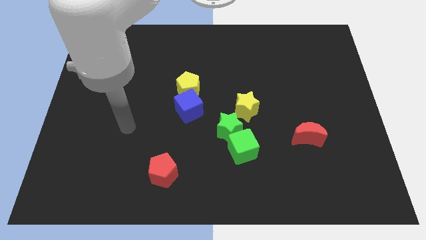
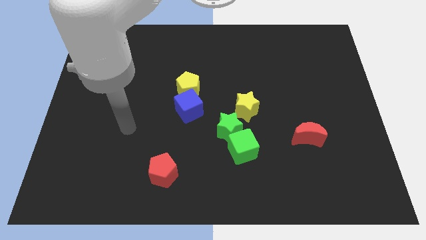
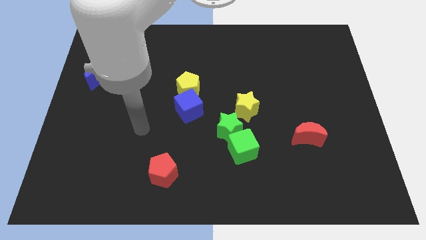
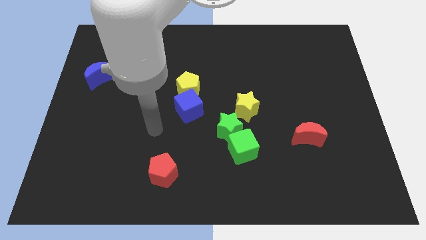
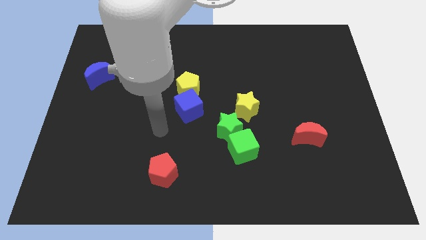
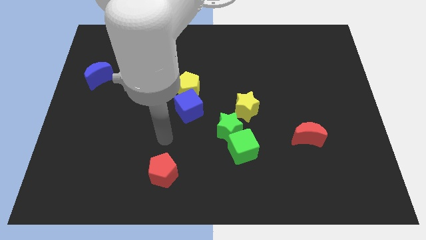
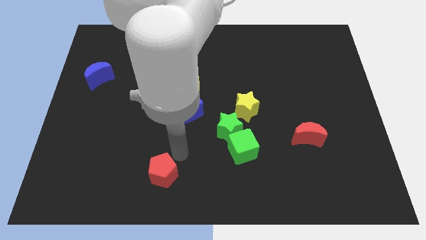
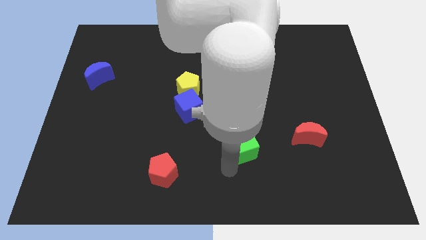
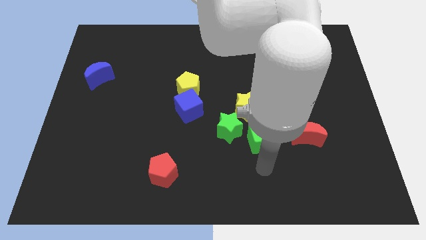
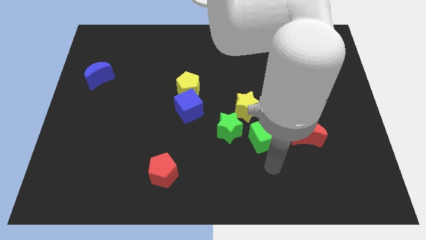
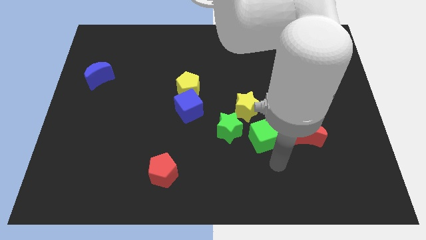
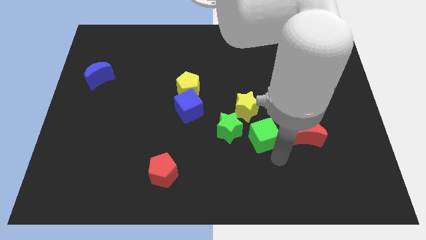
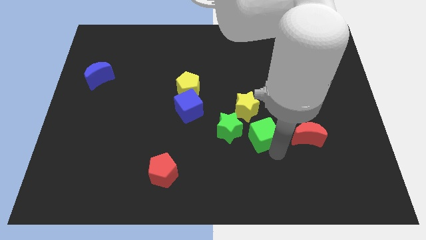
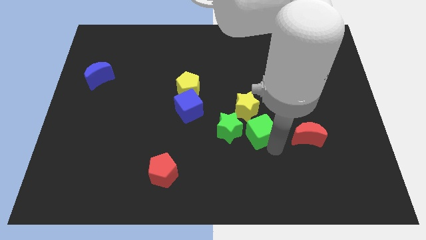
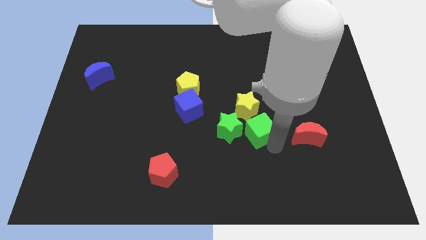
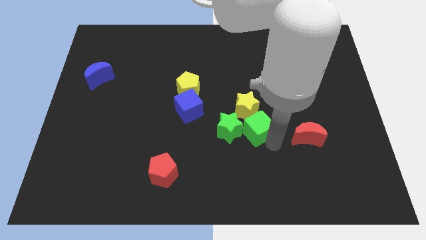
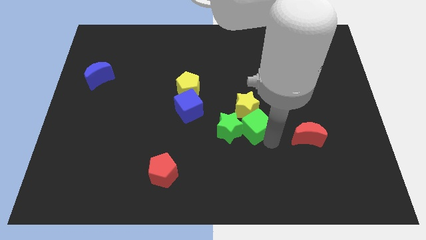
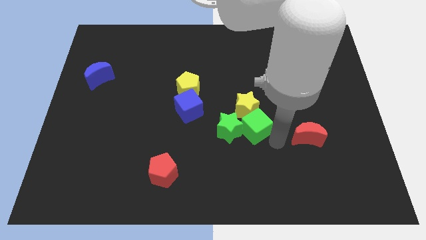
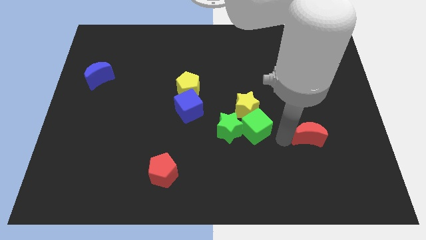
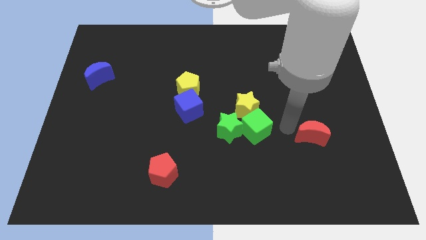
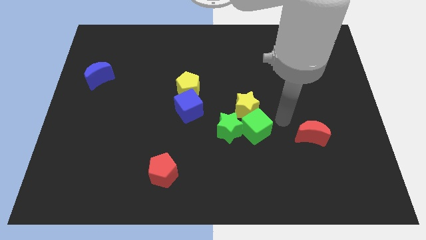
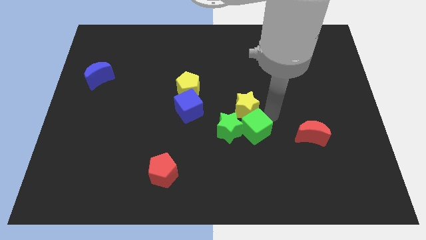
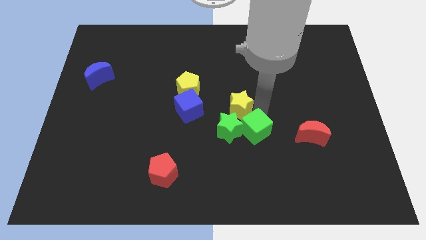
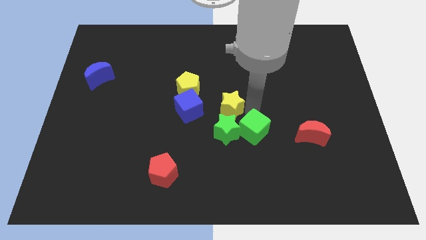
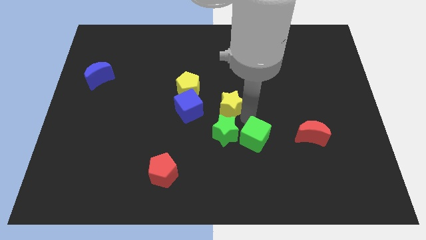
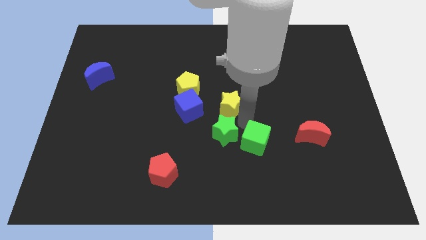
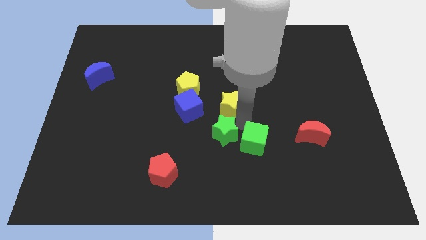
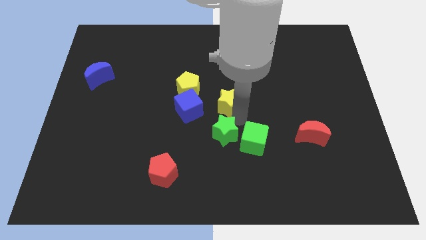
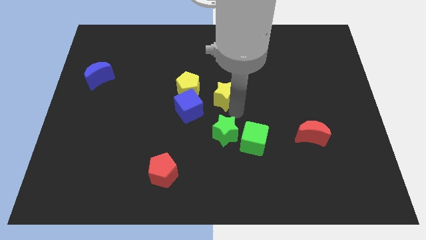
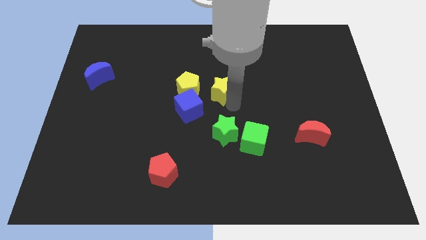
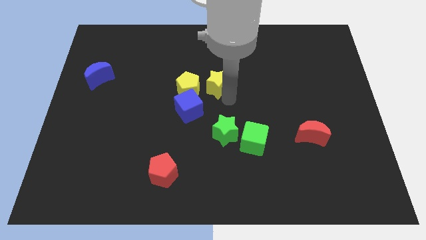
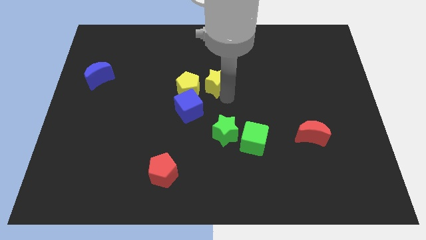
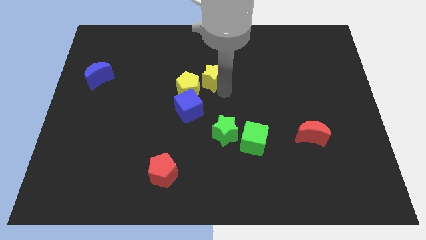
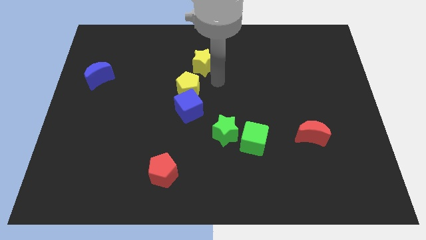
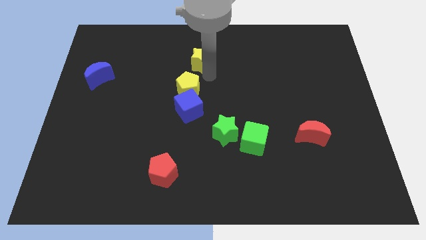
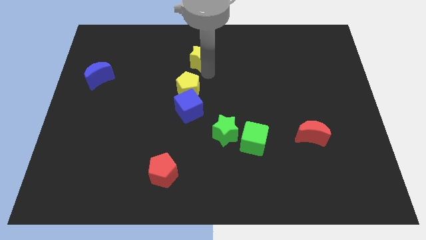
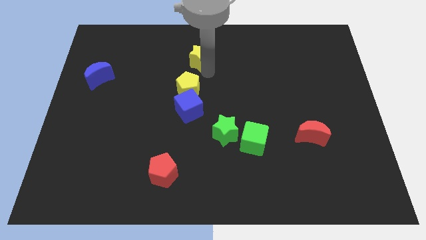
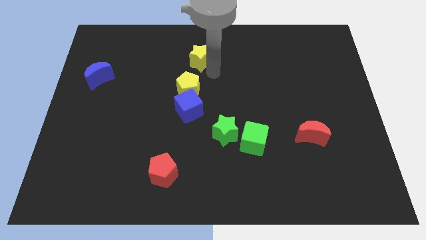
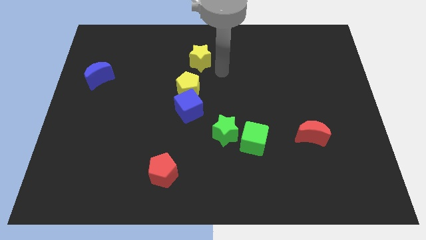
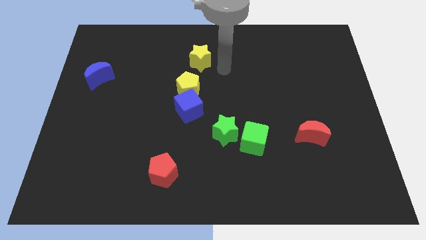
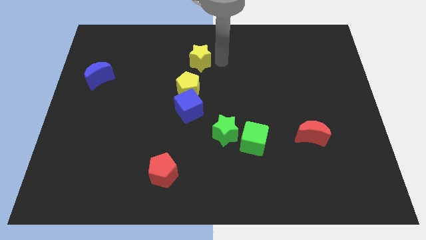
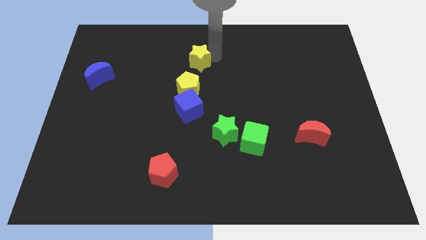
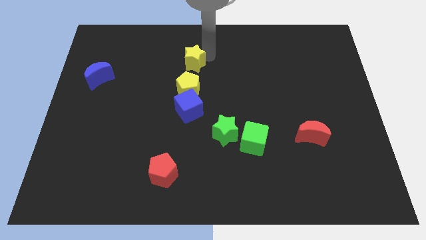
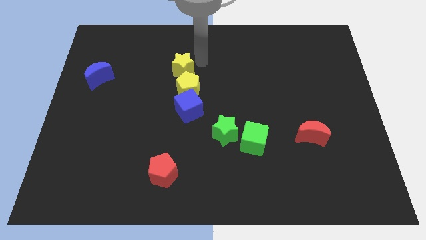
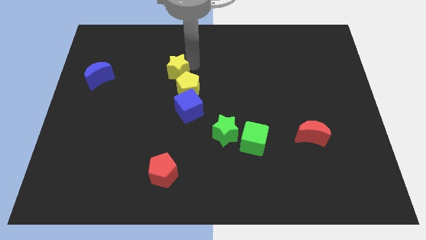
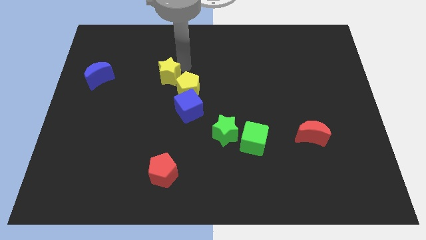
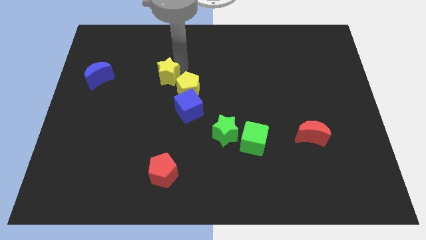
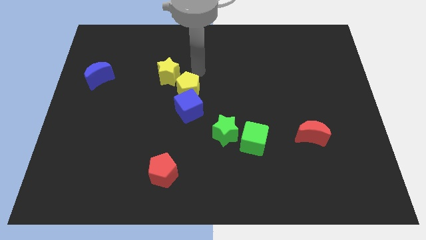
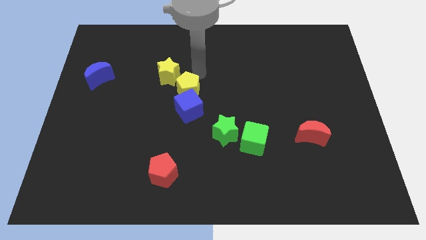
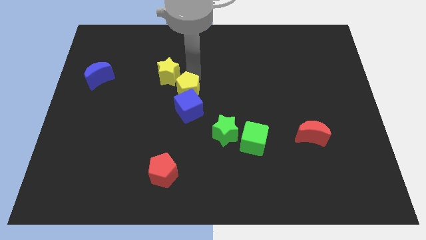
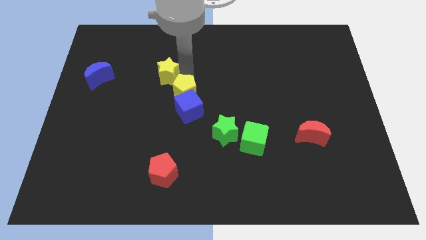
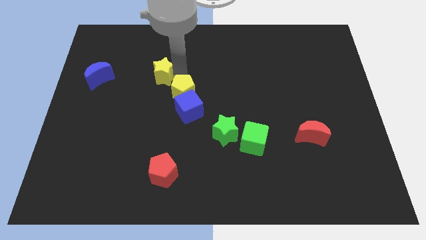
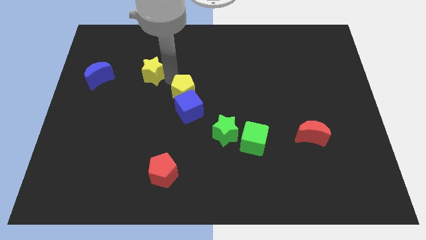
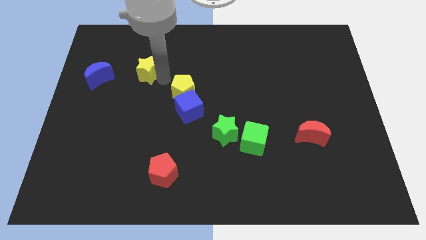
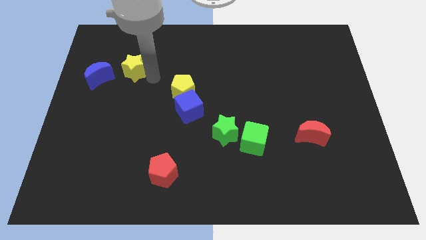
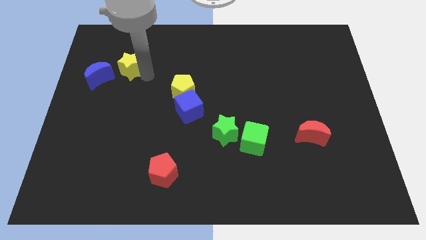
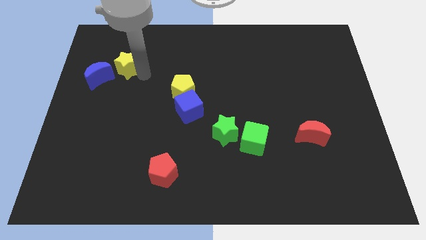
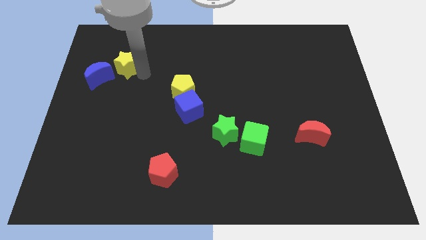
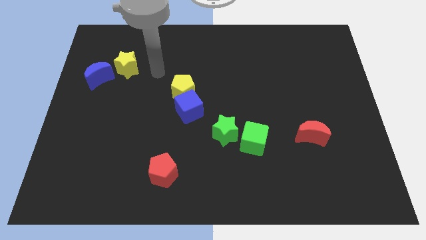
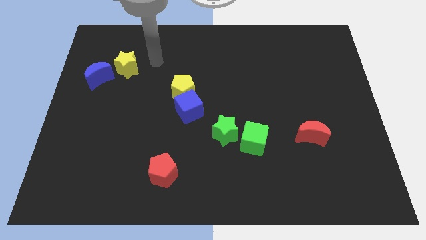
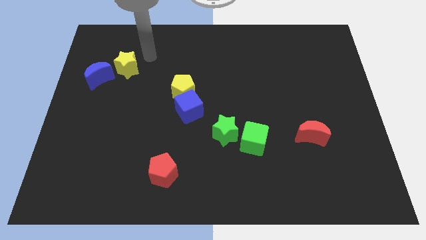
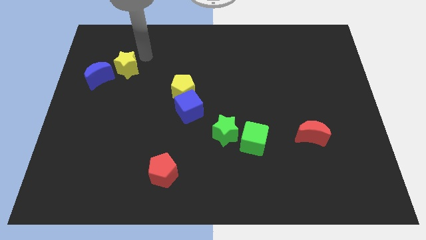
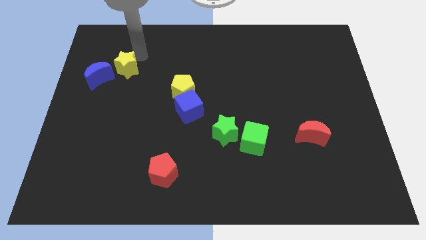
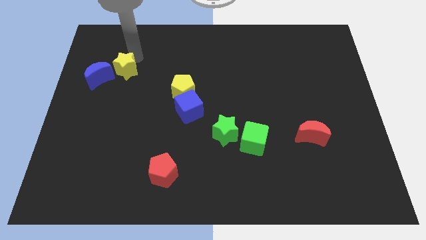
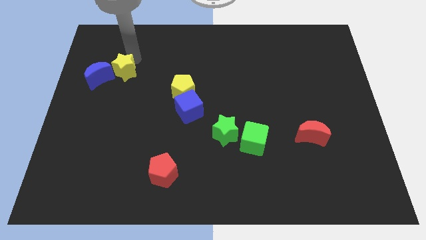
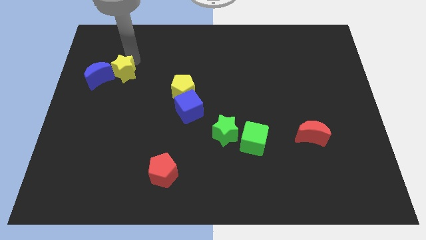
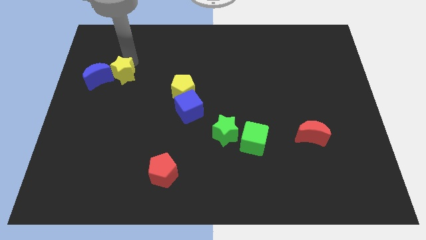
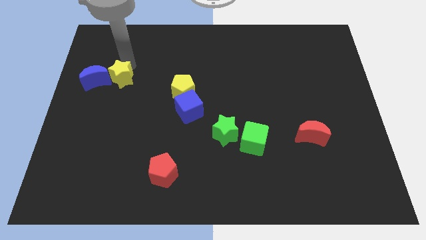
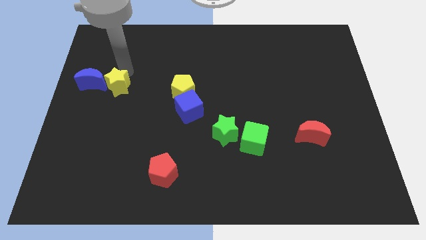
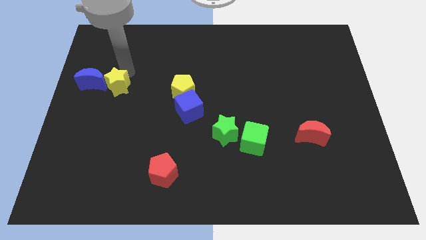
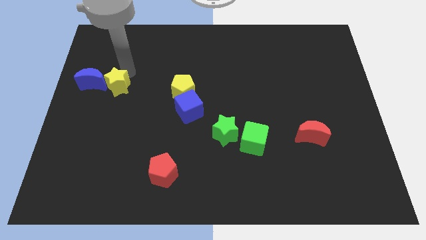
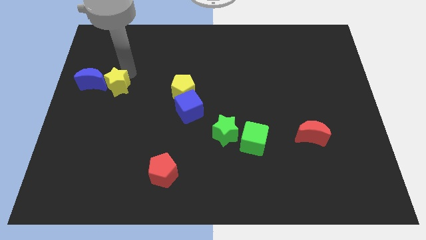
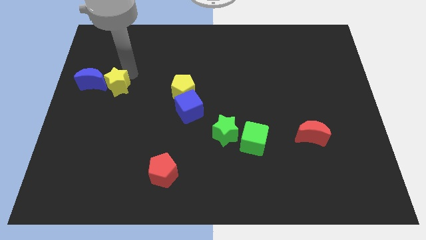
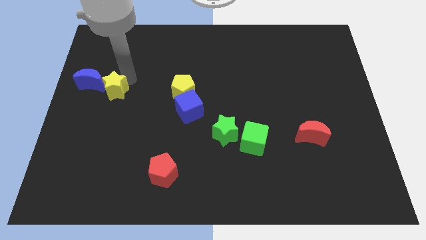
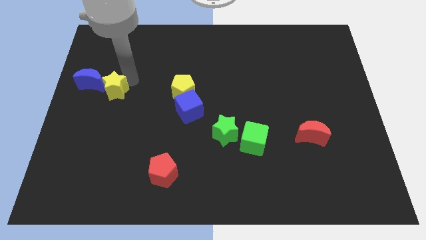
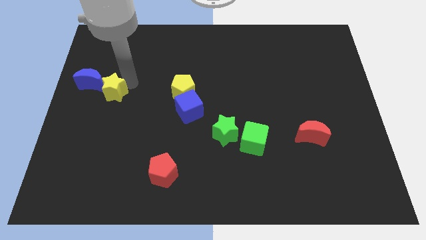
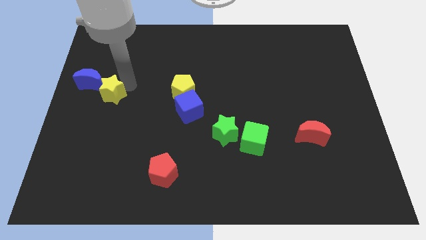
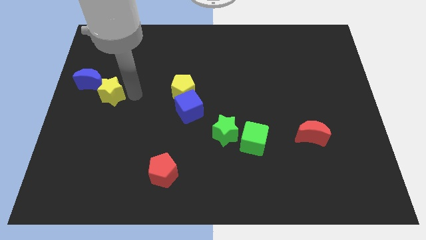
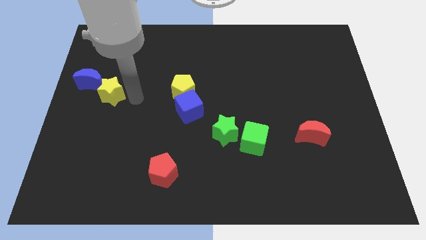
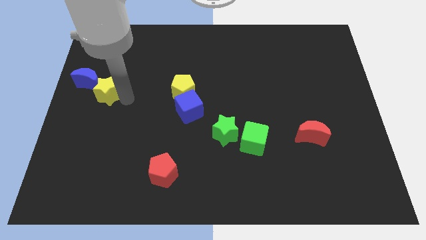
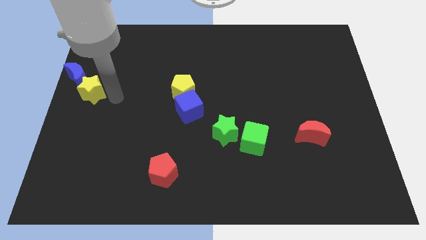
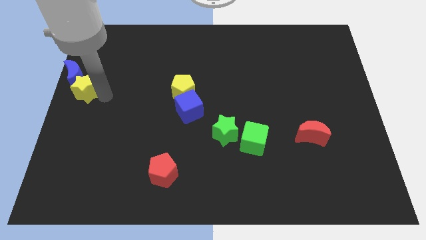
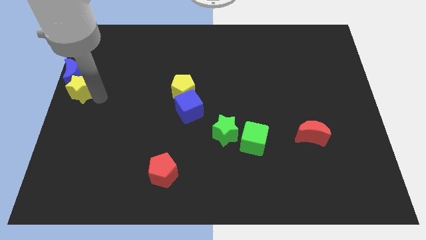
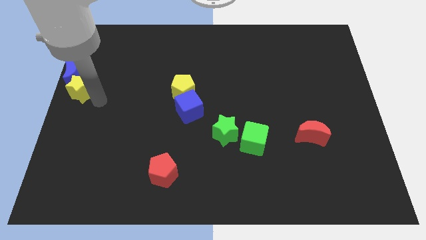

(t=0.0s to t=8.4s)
put the yellow star towards the blue moon

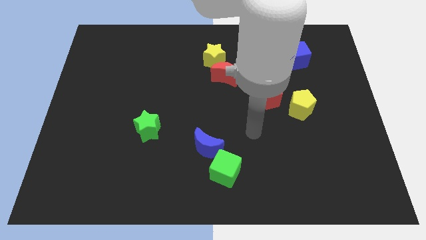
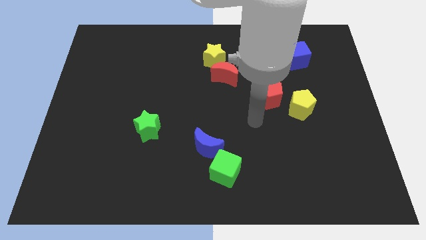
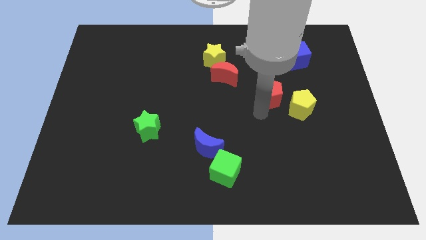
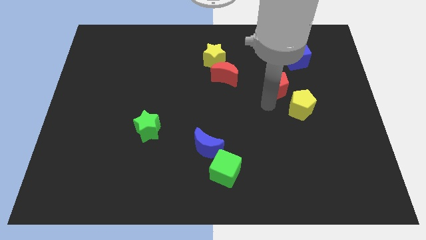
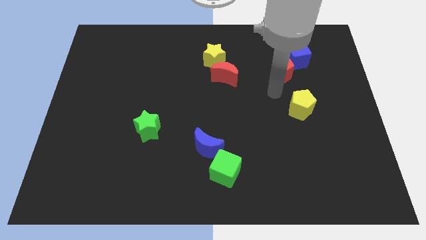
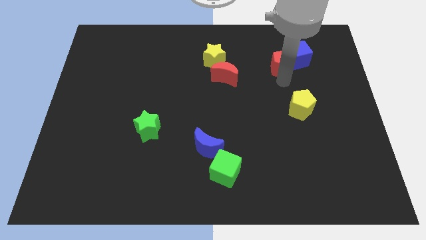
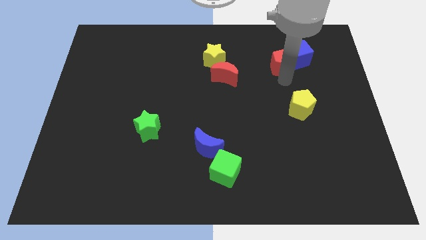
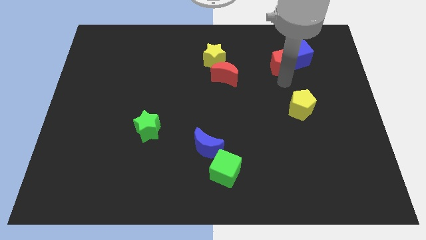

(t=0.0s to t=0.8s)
slide the red pentagon next to the blue cube
